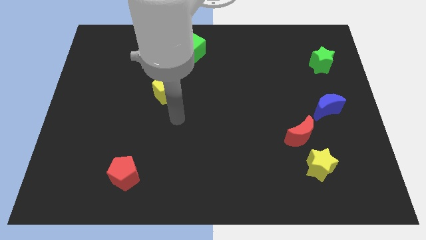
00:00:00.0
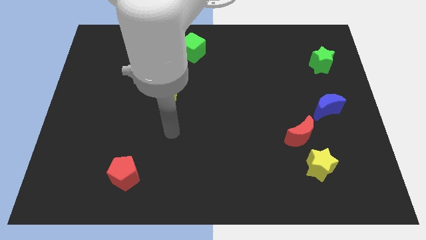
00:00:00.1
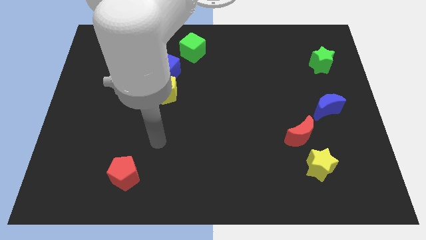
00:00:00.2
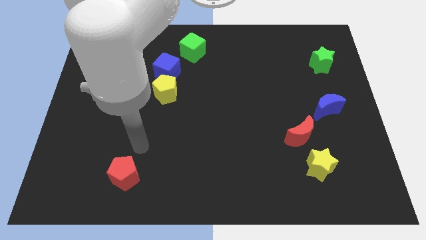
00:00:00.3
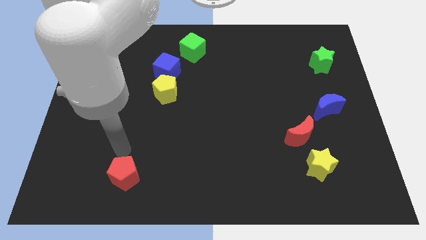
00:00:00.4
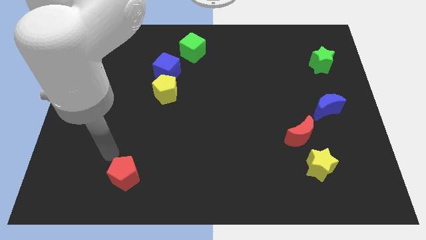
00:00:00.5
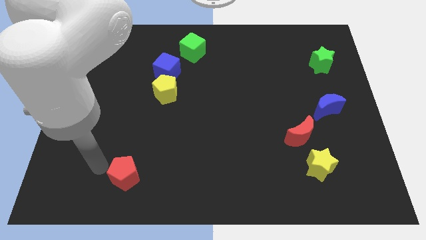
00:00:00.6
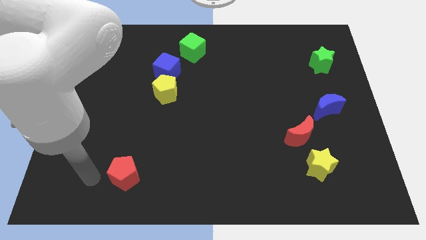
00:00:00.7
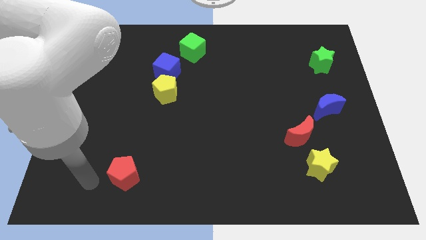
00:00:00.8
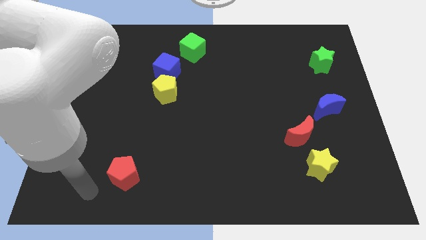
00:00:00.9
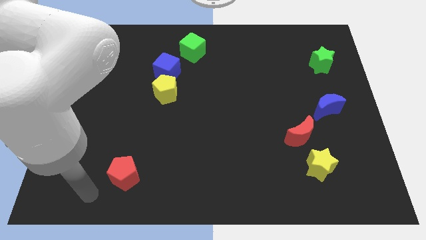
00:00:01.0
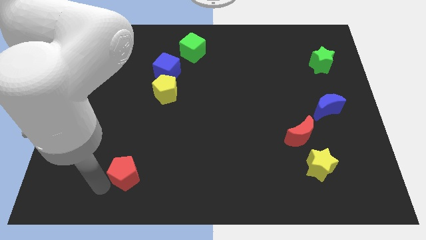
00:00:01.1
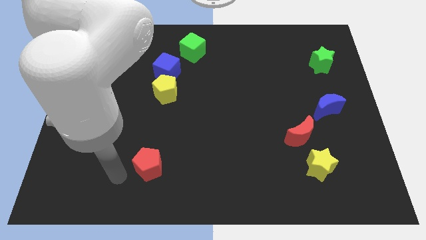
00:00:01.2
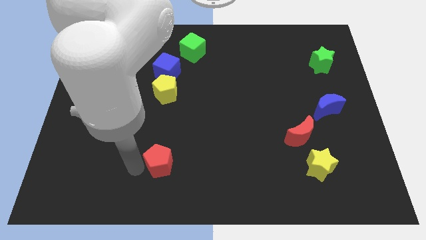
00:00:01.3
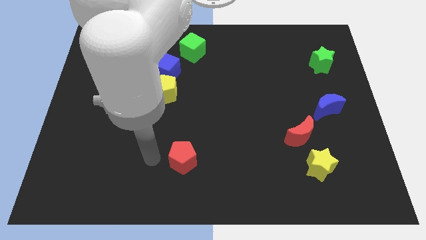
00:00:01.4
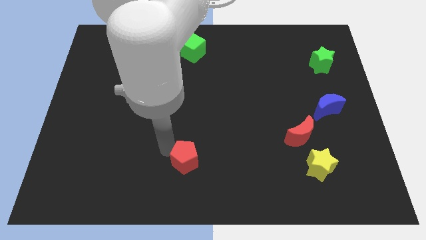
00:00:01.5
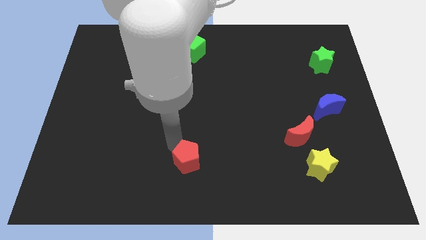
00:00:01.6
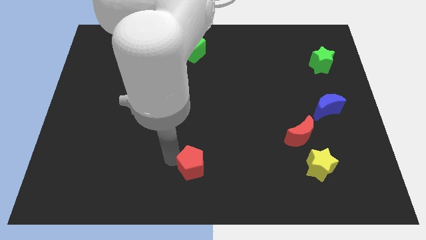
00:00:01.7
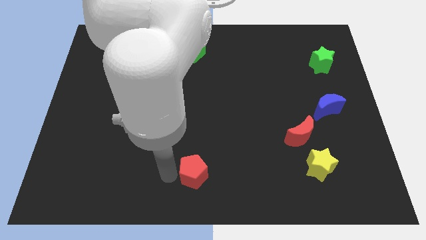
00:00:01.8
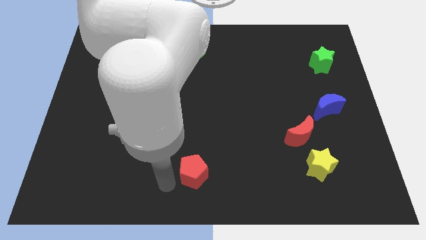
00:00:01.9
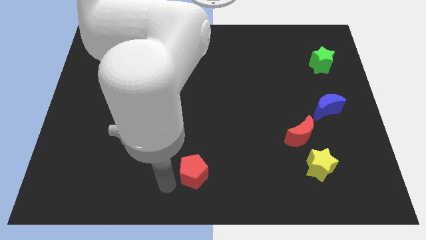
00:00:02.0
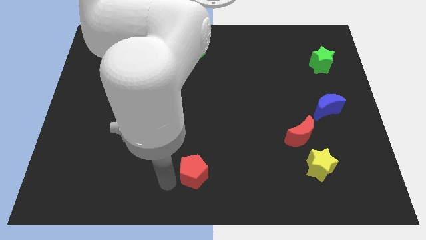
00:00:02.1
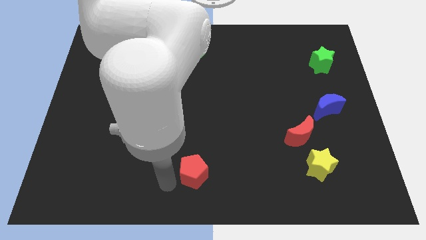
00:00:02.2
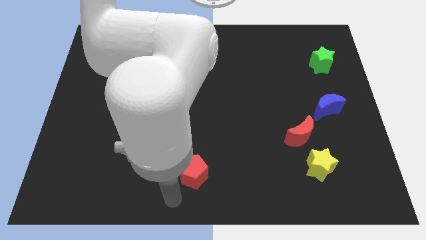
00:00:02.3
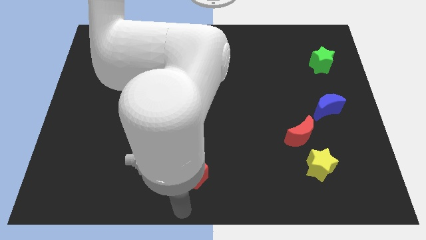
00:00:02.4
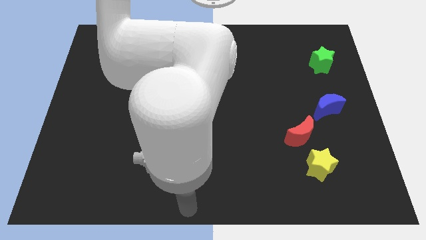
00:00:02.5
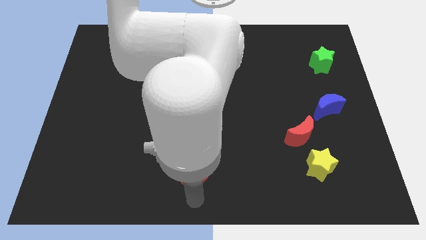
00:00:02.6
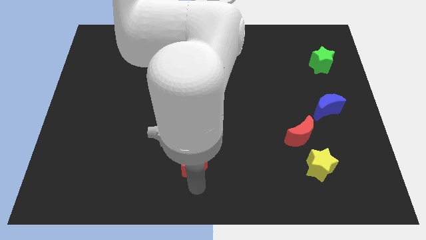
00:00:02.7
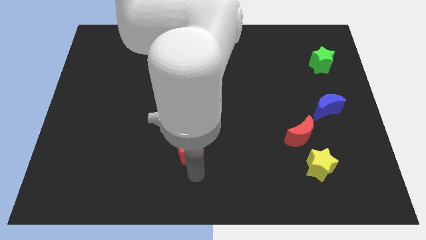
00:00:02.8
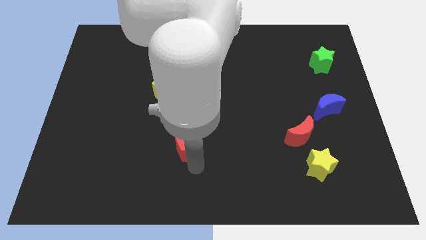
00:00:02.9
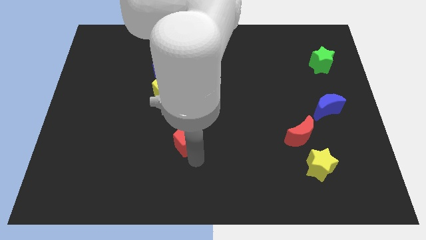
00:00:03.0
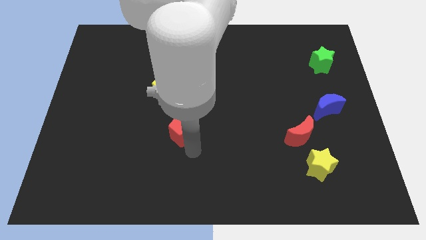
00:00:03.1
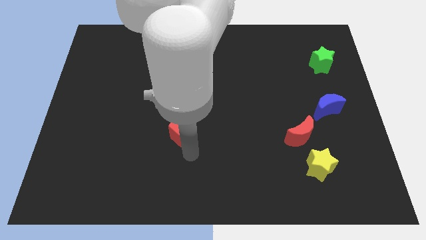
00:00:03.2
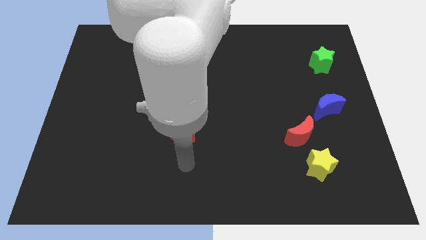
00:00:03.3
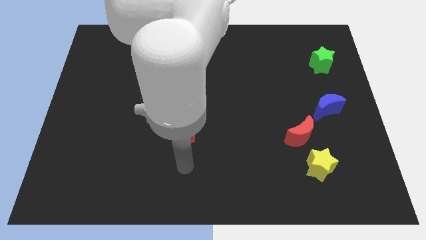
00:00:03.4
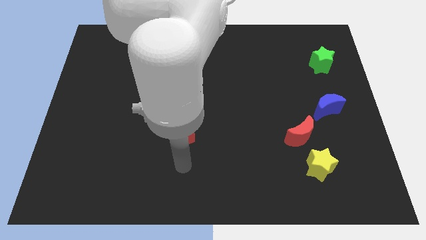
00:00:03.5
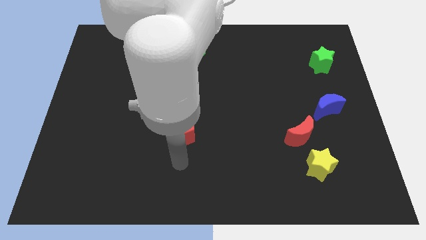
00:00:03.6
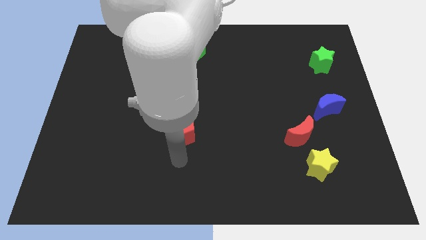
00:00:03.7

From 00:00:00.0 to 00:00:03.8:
push the red pentagon towards the center of the board

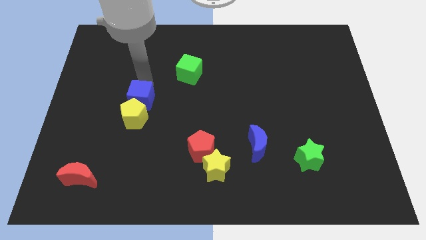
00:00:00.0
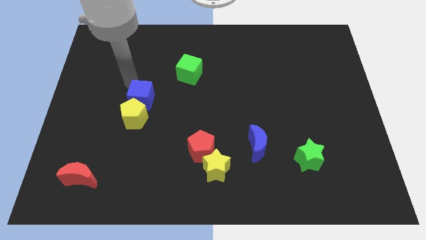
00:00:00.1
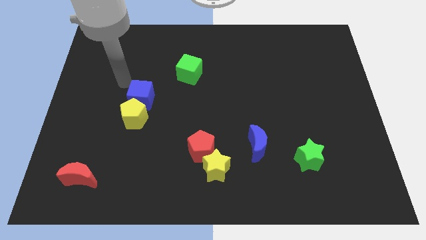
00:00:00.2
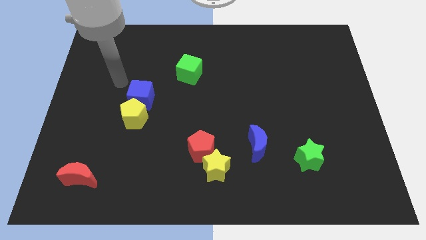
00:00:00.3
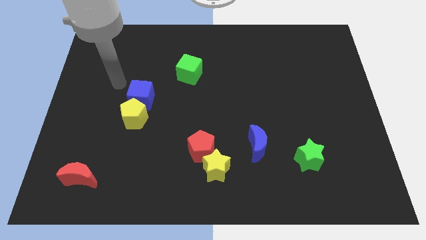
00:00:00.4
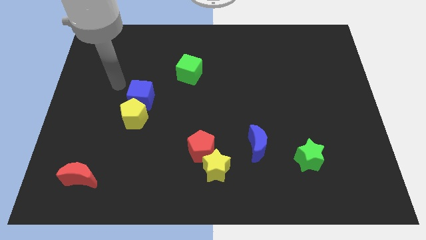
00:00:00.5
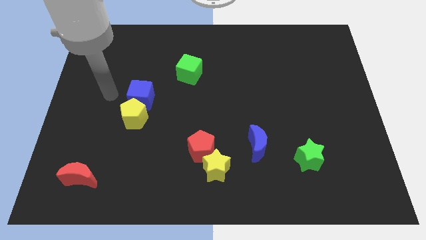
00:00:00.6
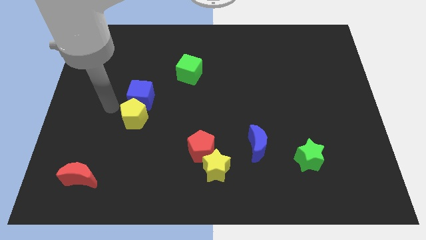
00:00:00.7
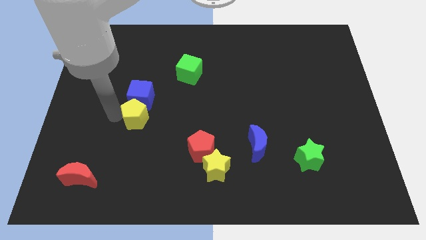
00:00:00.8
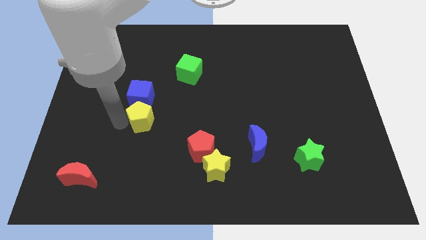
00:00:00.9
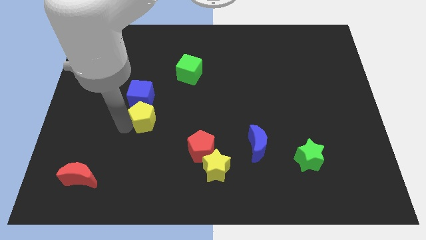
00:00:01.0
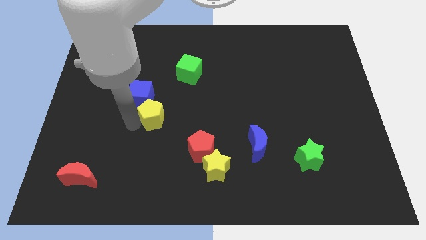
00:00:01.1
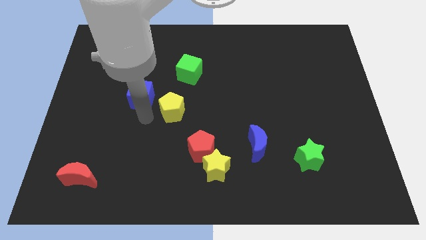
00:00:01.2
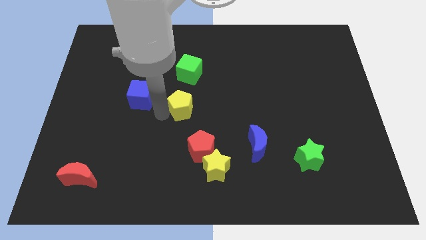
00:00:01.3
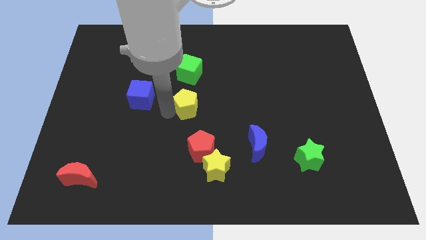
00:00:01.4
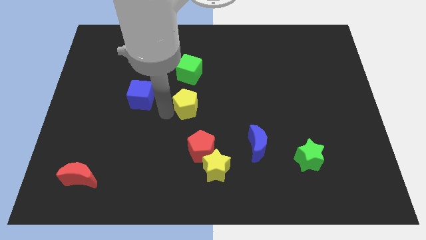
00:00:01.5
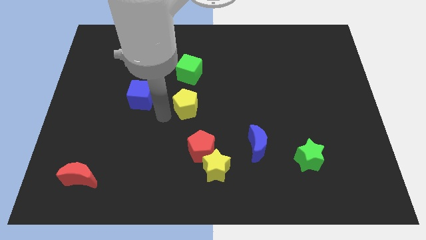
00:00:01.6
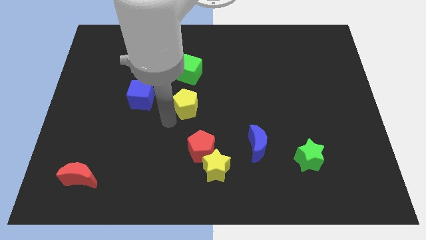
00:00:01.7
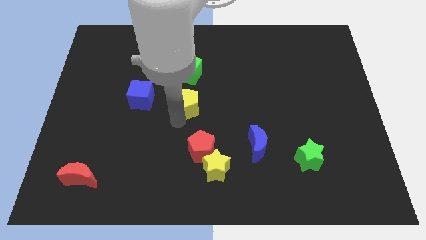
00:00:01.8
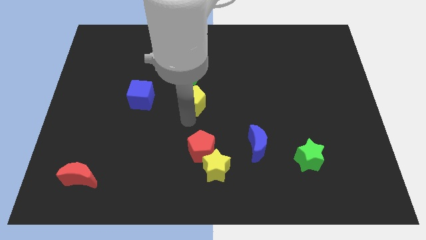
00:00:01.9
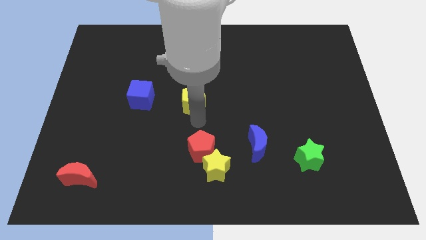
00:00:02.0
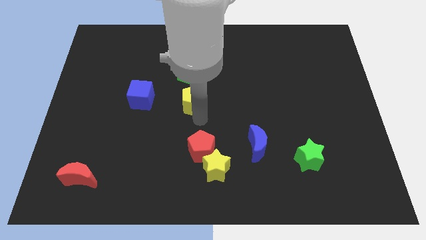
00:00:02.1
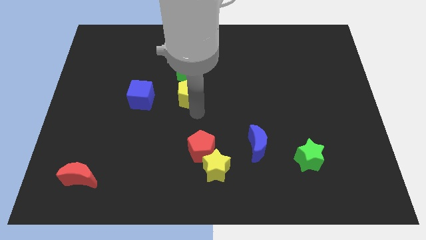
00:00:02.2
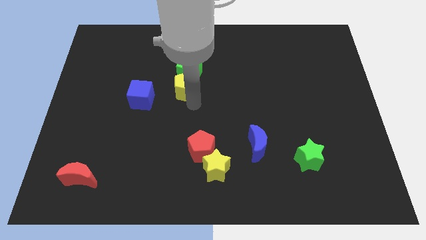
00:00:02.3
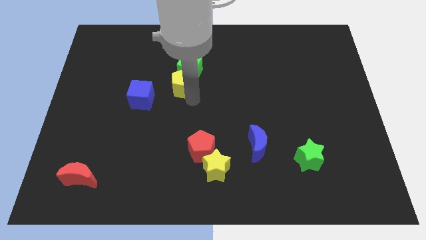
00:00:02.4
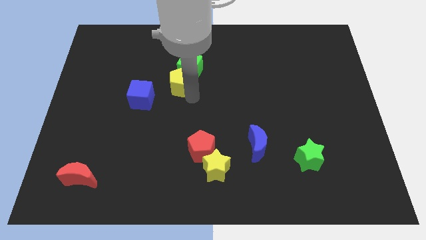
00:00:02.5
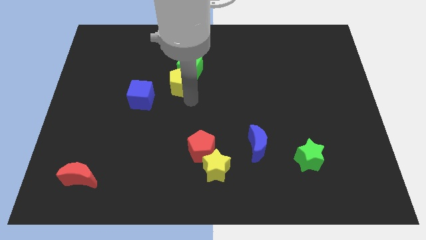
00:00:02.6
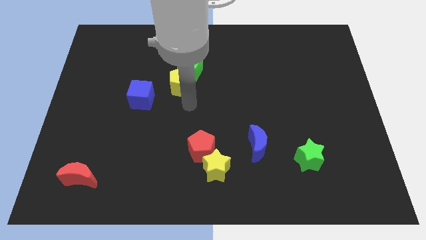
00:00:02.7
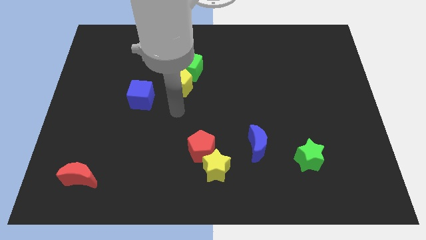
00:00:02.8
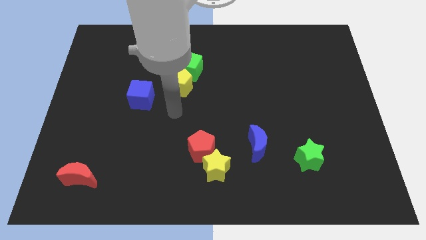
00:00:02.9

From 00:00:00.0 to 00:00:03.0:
move yellow pentagon below green cube

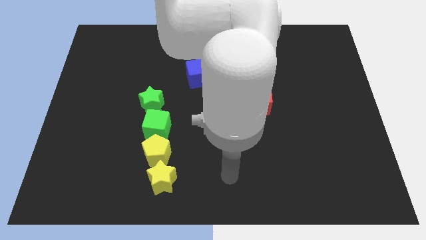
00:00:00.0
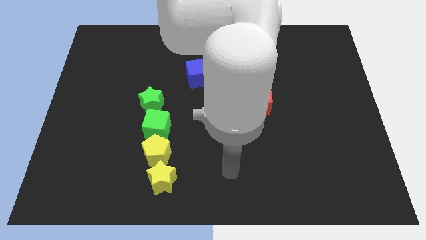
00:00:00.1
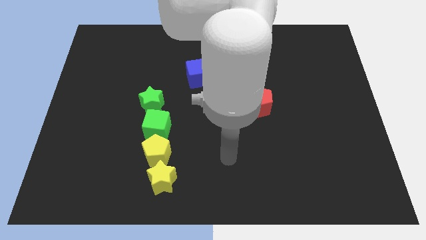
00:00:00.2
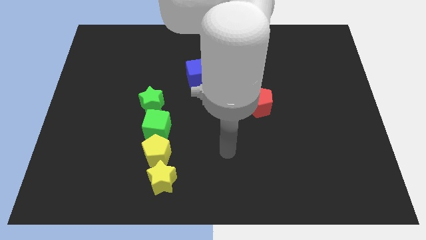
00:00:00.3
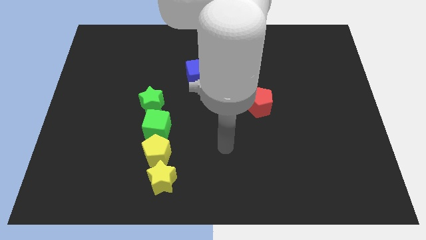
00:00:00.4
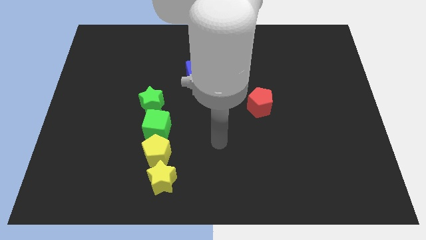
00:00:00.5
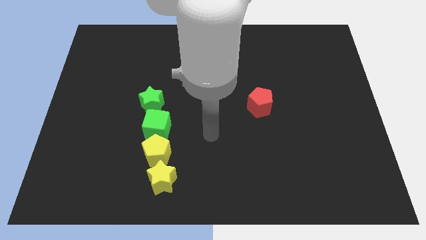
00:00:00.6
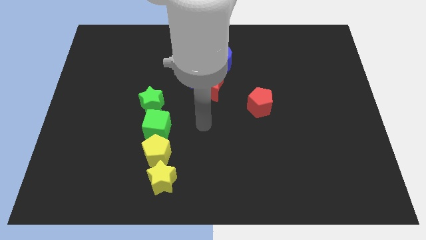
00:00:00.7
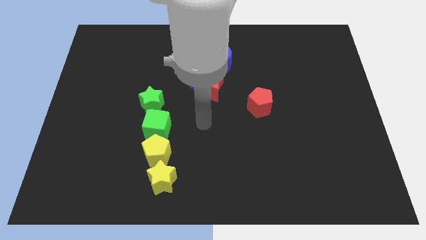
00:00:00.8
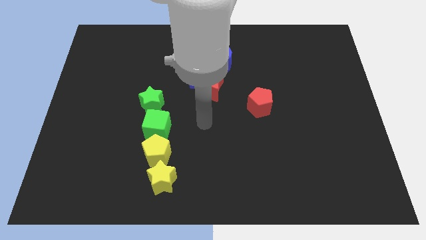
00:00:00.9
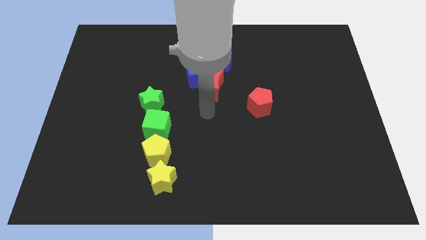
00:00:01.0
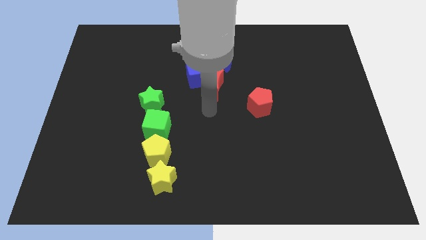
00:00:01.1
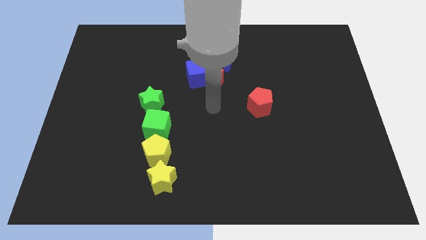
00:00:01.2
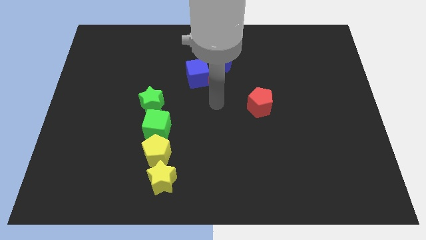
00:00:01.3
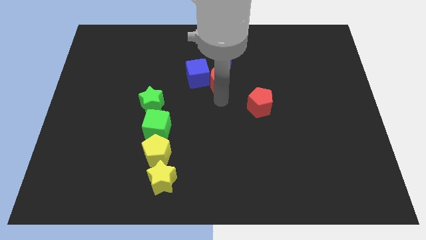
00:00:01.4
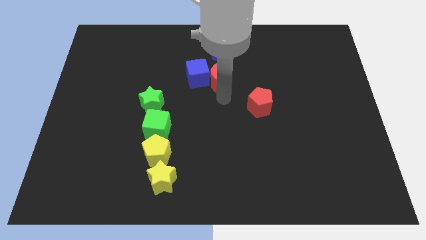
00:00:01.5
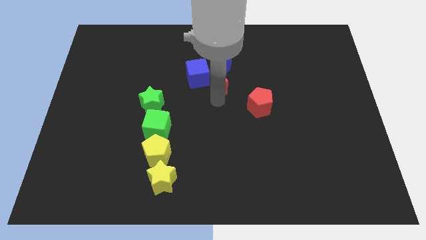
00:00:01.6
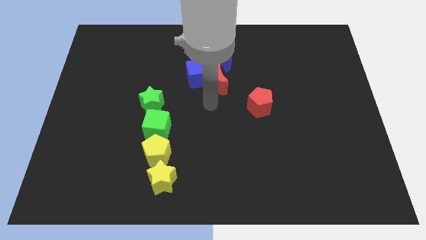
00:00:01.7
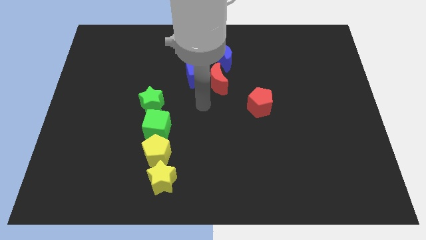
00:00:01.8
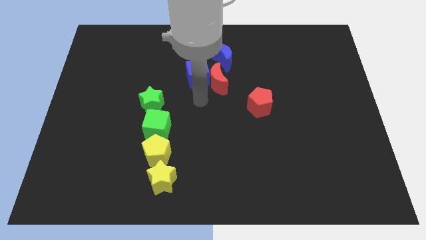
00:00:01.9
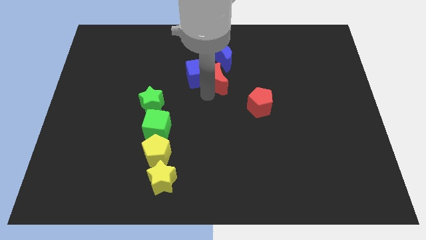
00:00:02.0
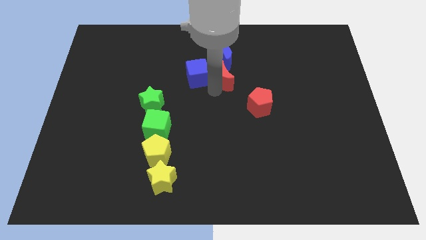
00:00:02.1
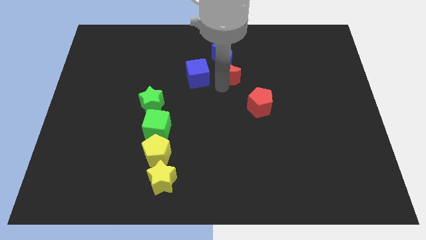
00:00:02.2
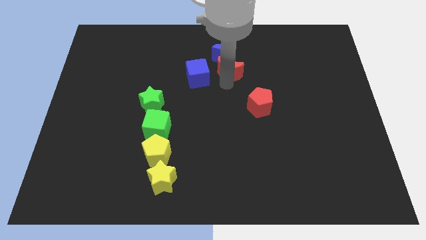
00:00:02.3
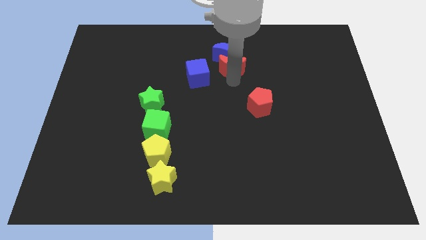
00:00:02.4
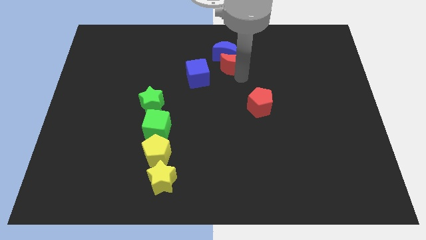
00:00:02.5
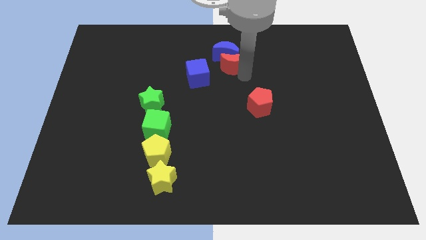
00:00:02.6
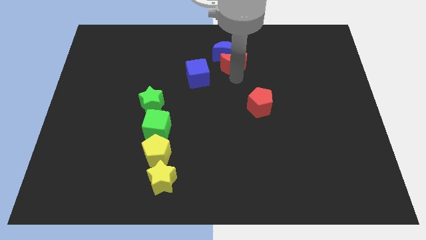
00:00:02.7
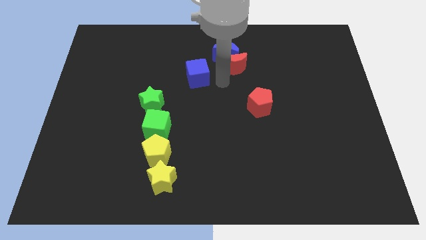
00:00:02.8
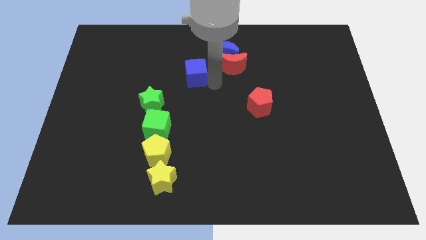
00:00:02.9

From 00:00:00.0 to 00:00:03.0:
push the red moon into the blue moon
